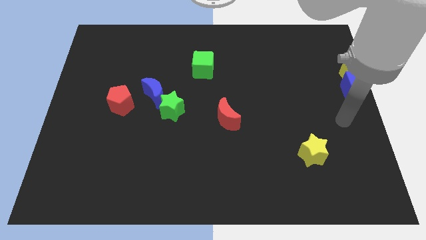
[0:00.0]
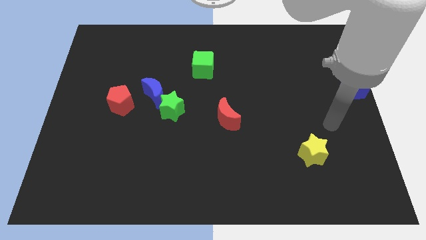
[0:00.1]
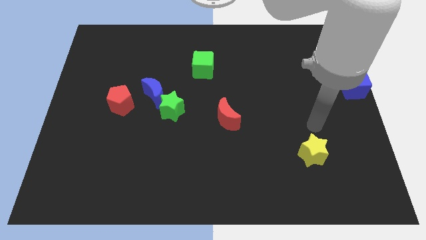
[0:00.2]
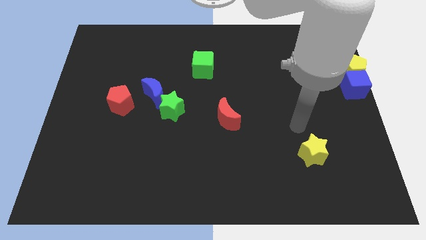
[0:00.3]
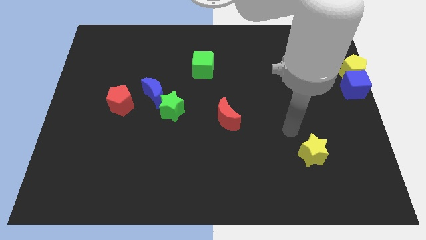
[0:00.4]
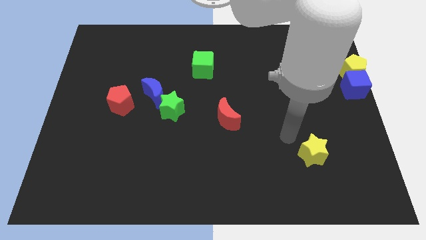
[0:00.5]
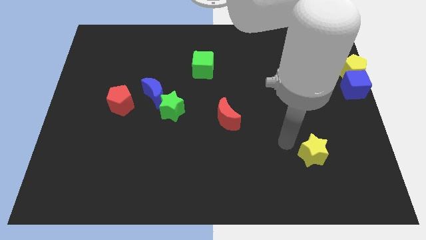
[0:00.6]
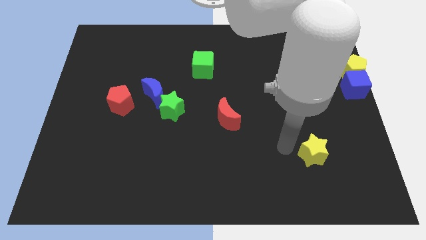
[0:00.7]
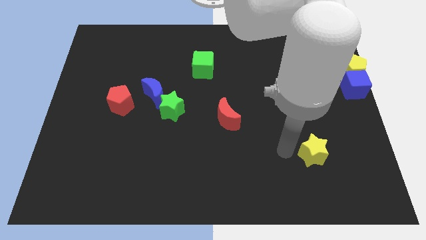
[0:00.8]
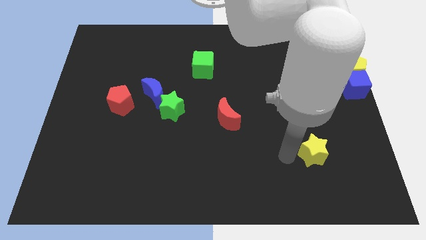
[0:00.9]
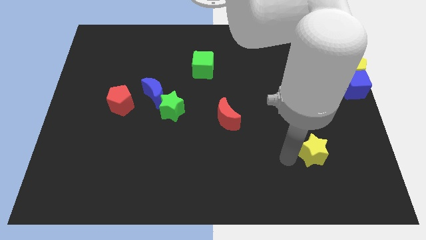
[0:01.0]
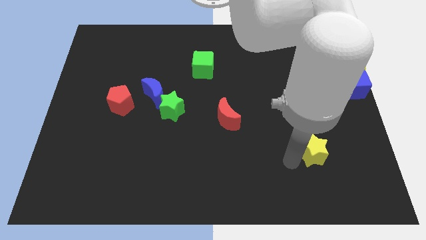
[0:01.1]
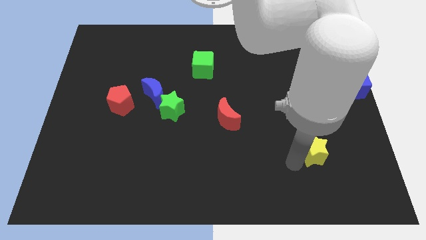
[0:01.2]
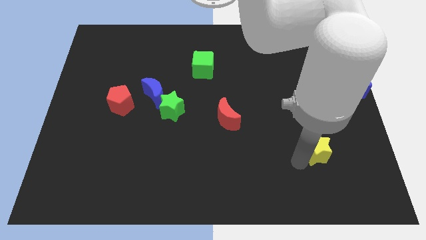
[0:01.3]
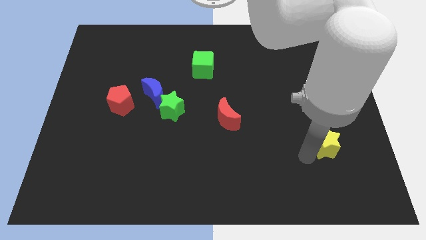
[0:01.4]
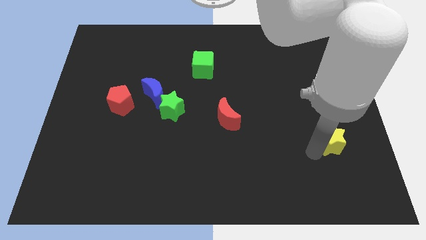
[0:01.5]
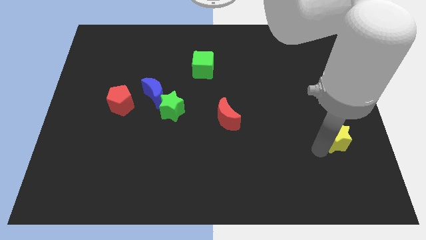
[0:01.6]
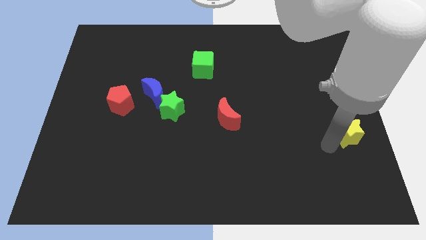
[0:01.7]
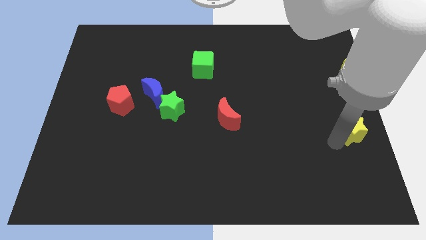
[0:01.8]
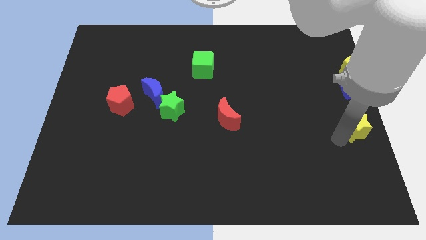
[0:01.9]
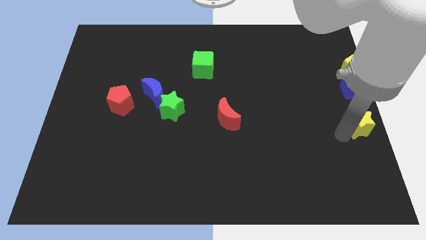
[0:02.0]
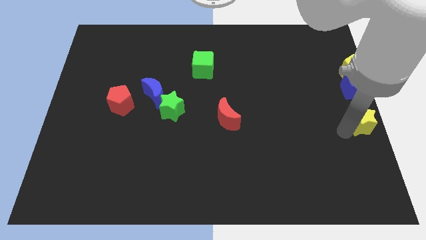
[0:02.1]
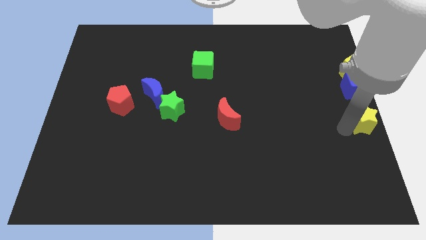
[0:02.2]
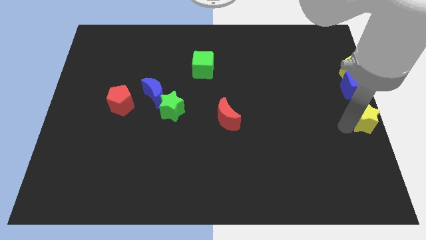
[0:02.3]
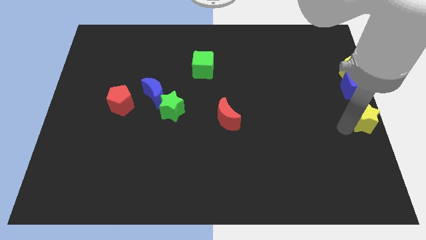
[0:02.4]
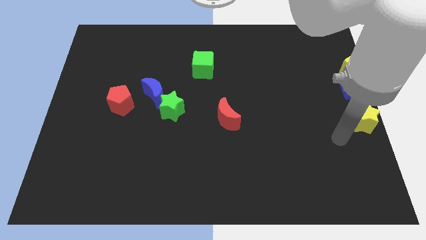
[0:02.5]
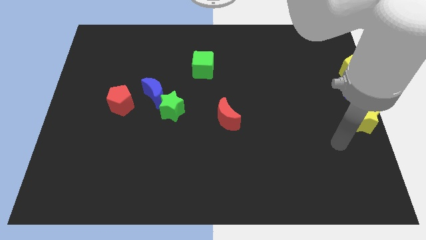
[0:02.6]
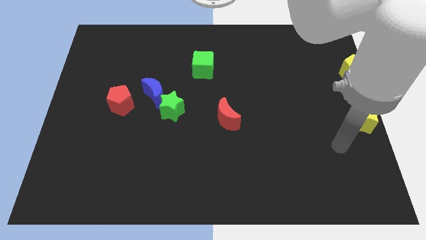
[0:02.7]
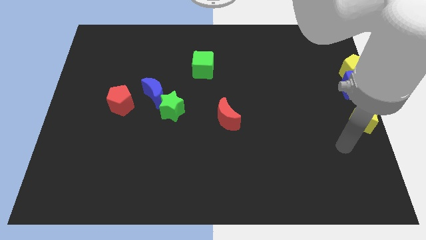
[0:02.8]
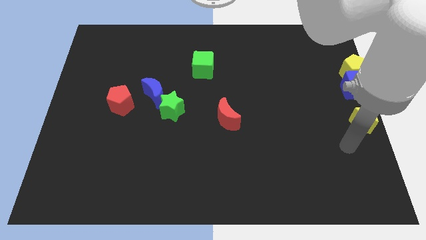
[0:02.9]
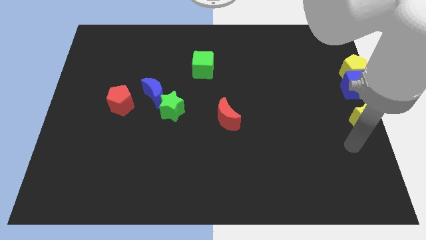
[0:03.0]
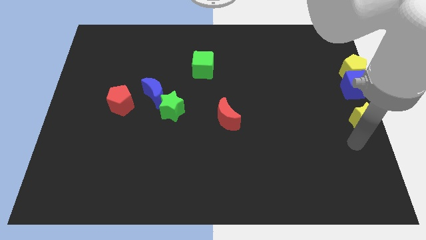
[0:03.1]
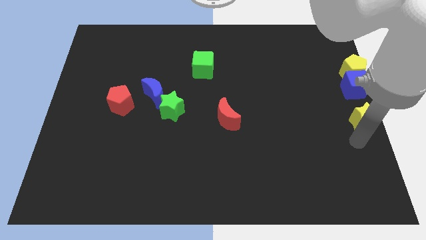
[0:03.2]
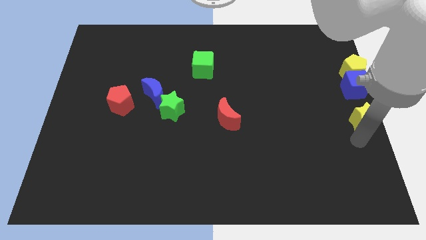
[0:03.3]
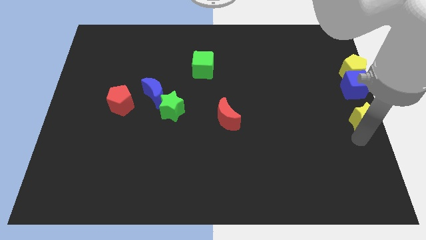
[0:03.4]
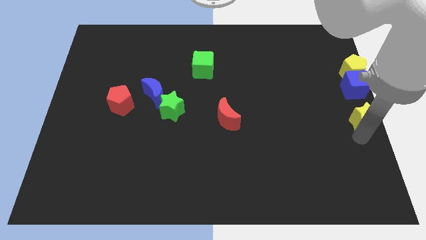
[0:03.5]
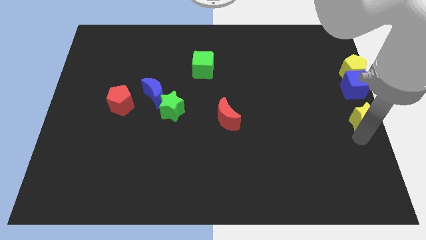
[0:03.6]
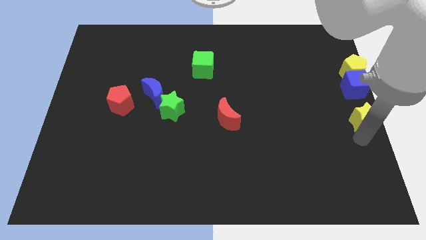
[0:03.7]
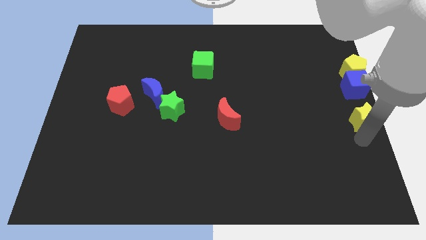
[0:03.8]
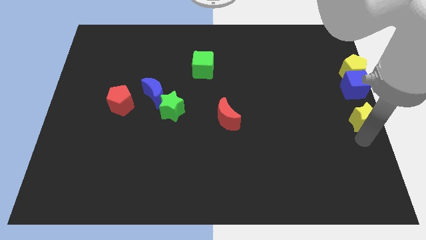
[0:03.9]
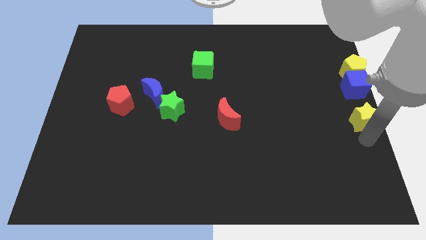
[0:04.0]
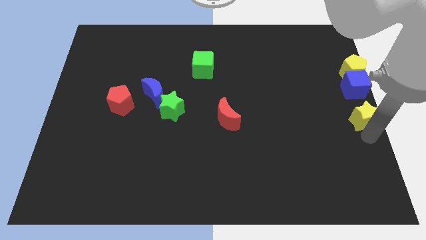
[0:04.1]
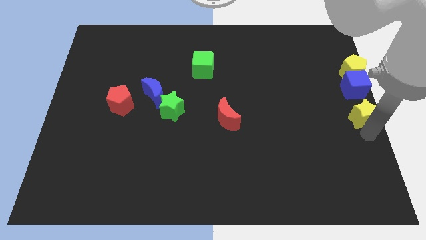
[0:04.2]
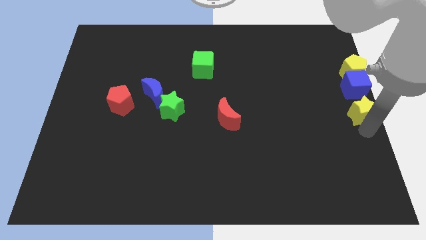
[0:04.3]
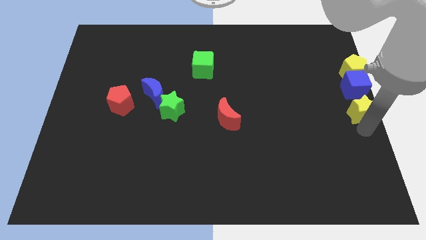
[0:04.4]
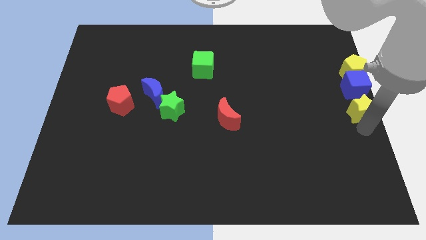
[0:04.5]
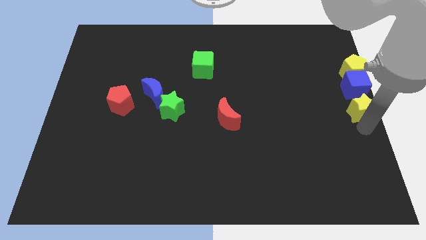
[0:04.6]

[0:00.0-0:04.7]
place the yellow star below the blue cube

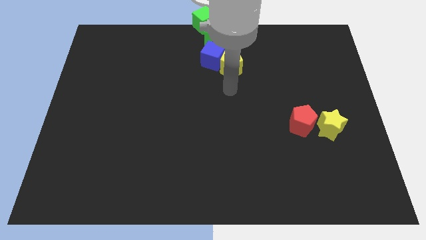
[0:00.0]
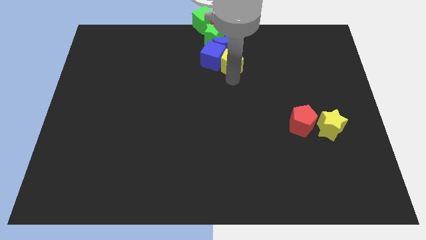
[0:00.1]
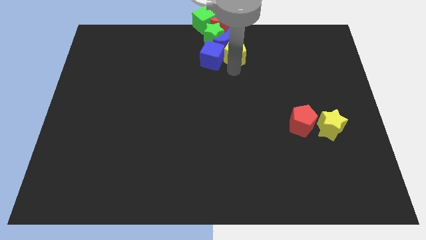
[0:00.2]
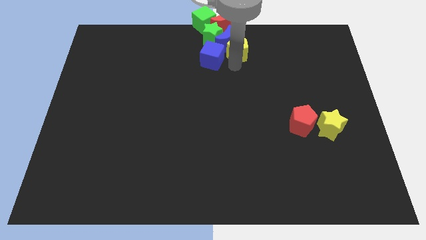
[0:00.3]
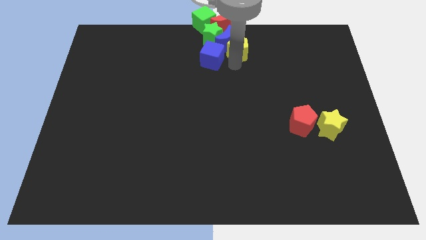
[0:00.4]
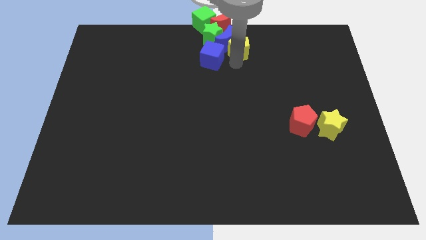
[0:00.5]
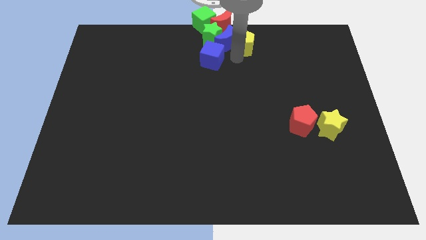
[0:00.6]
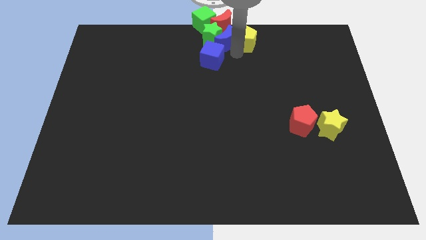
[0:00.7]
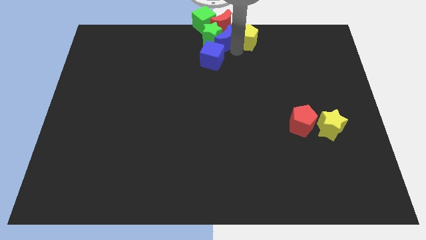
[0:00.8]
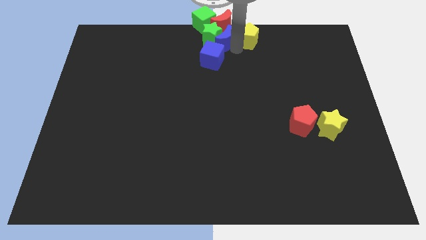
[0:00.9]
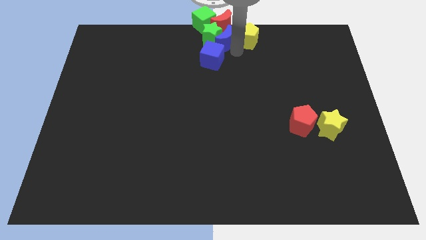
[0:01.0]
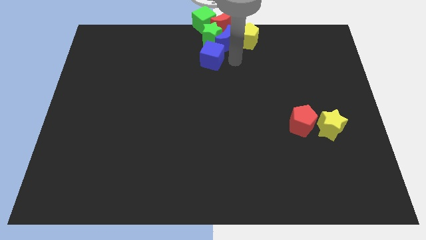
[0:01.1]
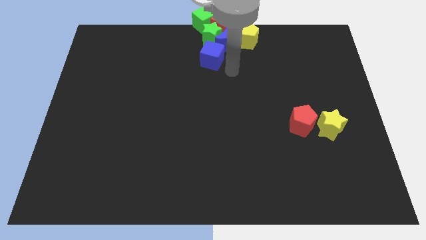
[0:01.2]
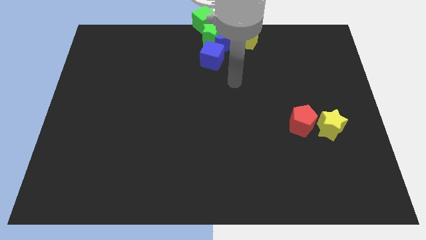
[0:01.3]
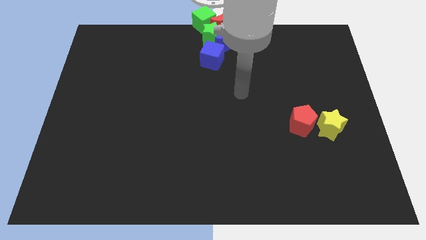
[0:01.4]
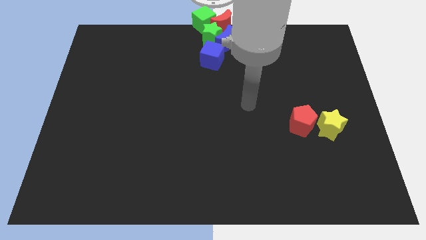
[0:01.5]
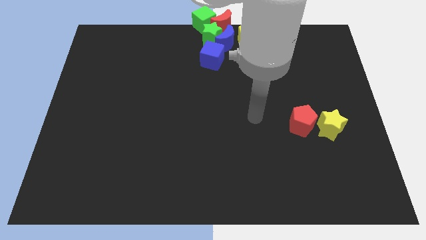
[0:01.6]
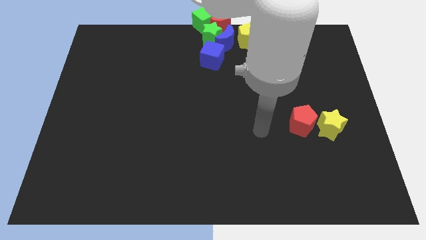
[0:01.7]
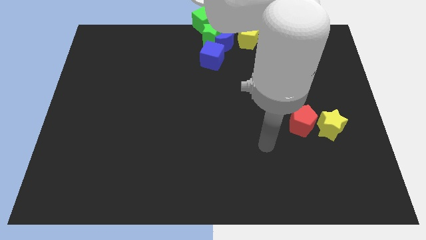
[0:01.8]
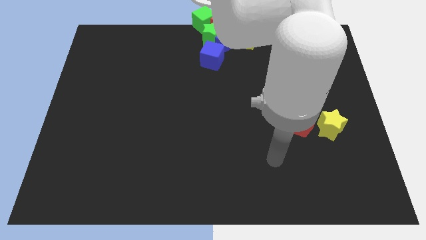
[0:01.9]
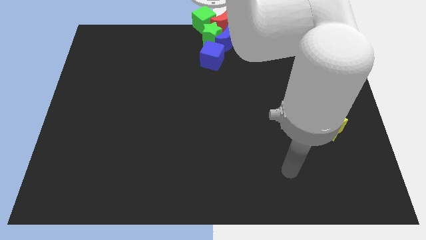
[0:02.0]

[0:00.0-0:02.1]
put the yellow pentagon right to the blue moon

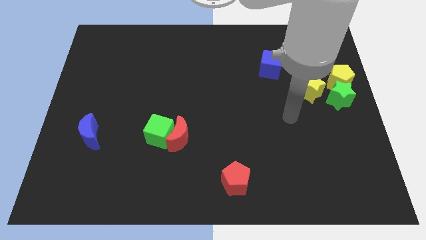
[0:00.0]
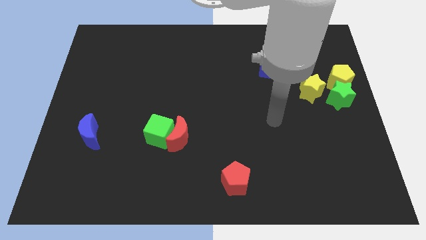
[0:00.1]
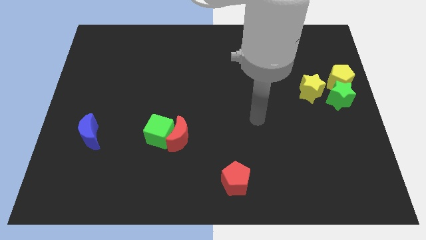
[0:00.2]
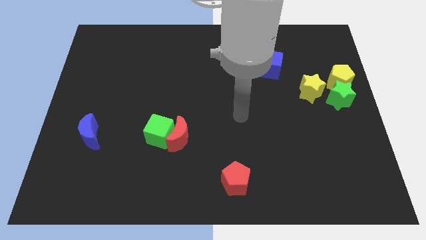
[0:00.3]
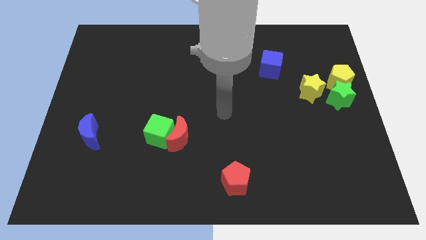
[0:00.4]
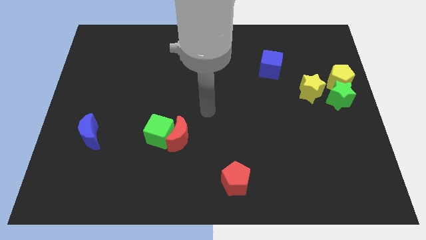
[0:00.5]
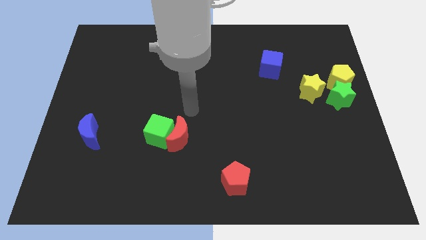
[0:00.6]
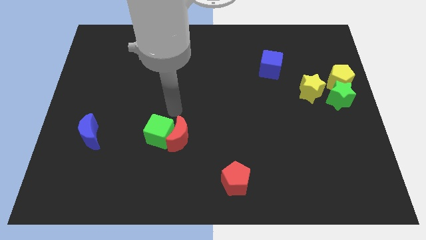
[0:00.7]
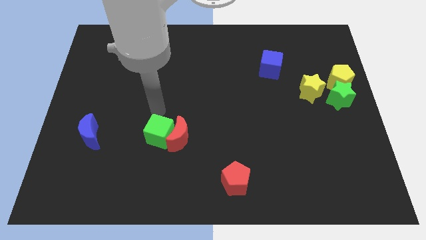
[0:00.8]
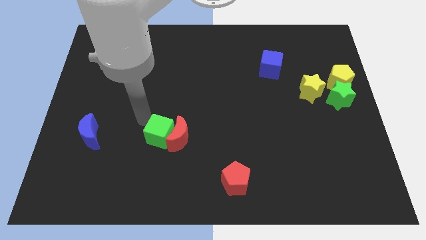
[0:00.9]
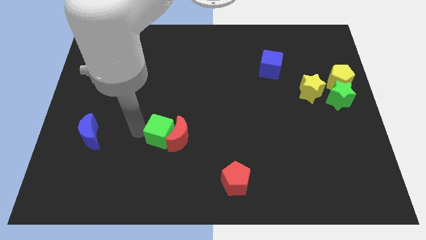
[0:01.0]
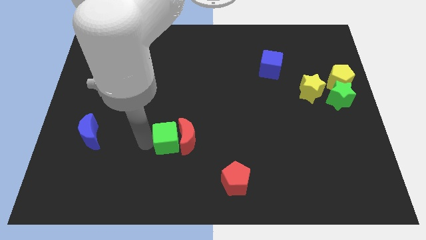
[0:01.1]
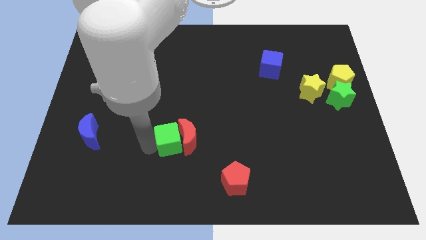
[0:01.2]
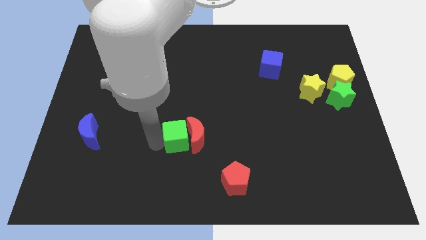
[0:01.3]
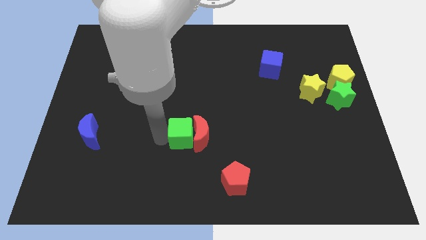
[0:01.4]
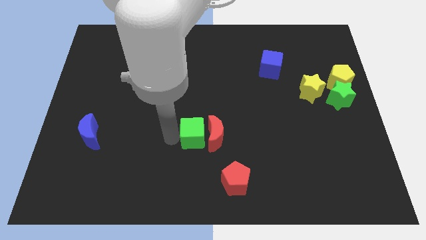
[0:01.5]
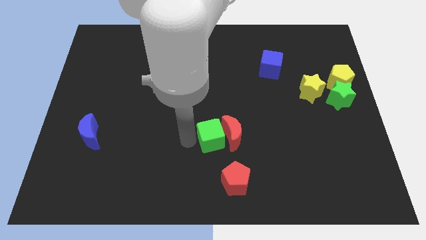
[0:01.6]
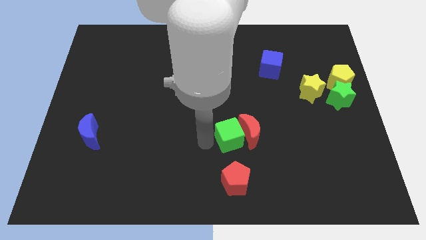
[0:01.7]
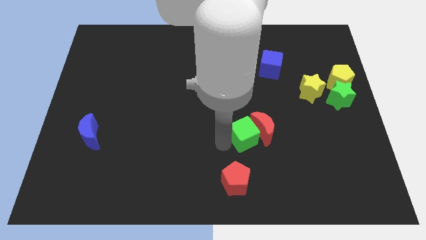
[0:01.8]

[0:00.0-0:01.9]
move the green cube and red crescent towards the right

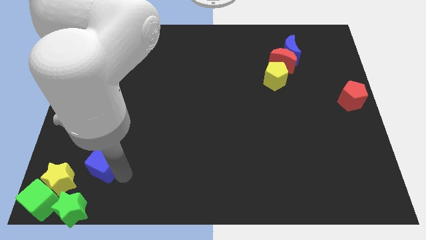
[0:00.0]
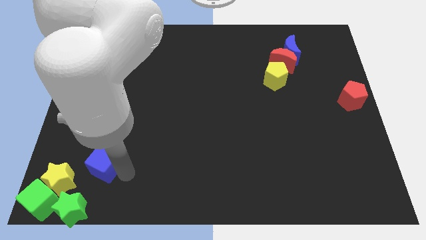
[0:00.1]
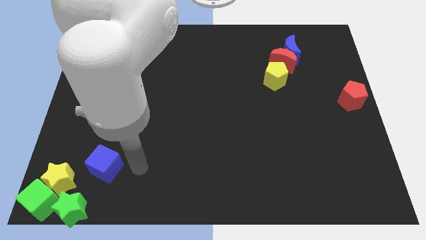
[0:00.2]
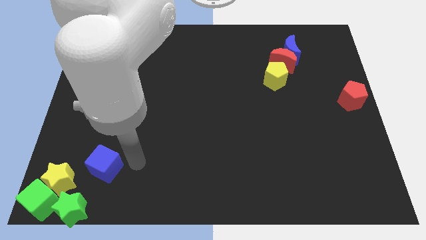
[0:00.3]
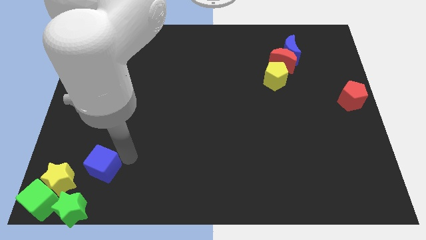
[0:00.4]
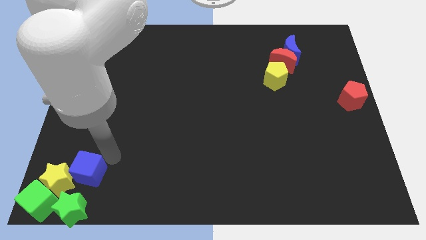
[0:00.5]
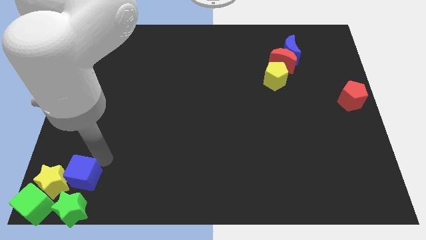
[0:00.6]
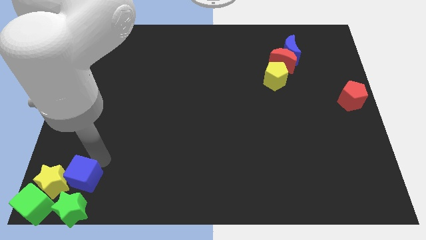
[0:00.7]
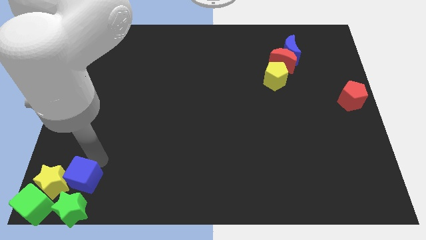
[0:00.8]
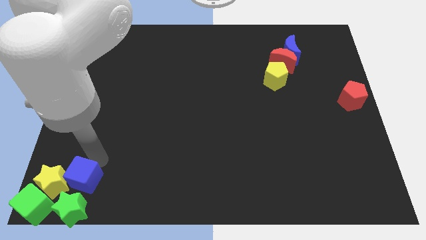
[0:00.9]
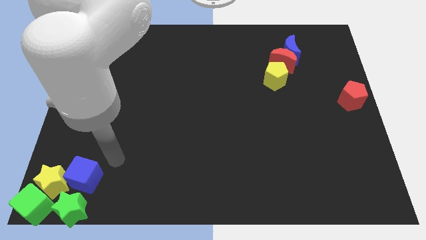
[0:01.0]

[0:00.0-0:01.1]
place blue cube above the yellow and green stars
